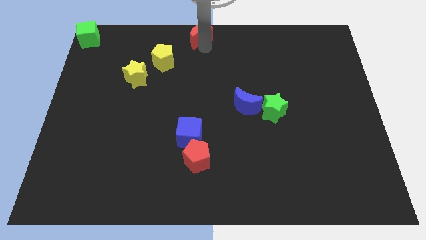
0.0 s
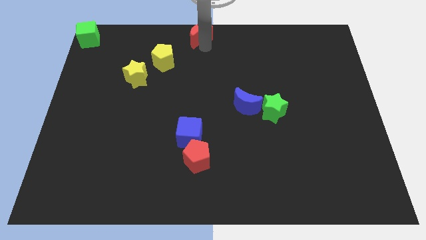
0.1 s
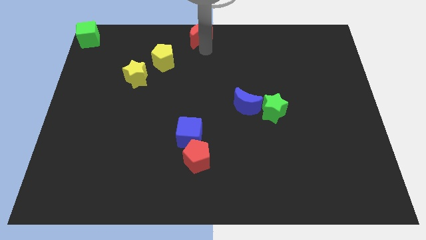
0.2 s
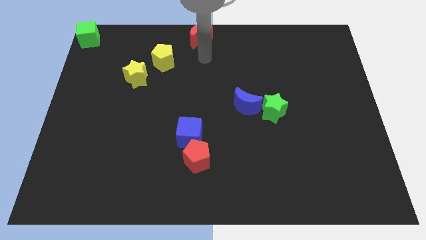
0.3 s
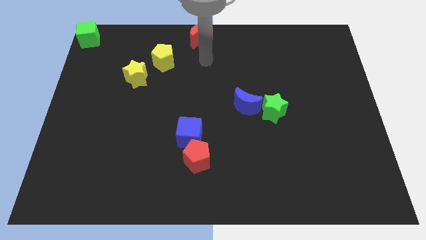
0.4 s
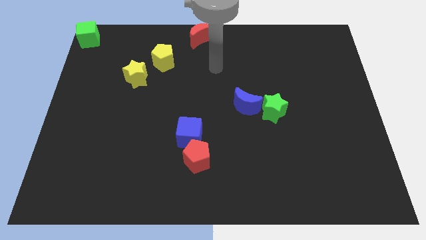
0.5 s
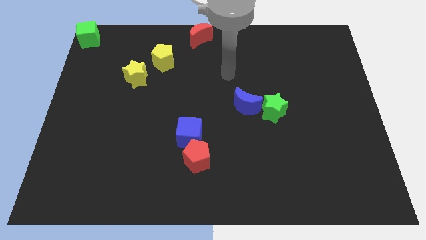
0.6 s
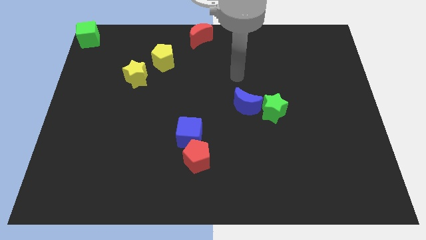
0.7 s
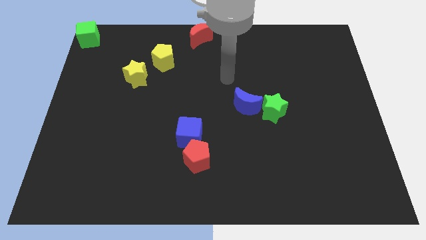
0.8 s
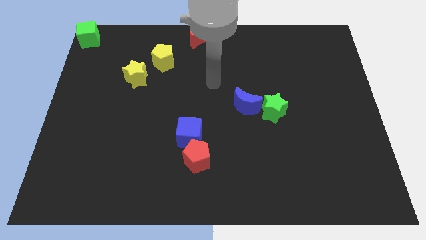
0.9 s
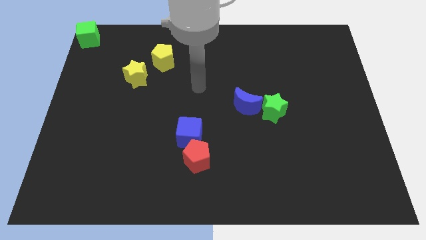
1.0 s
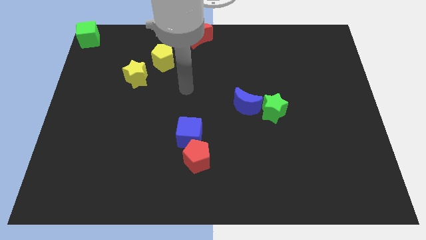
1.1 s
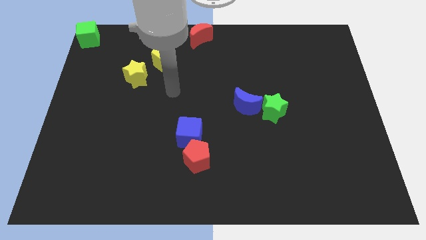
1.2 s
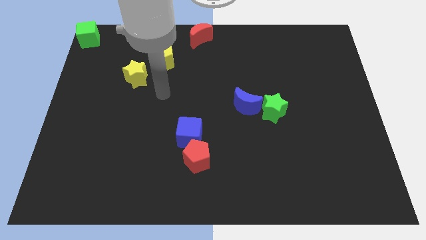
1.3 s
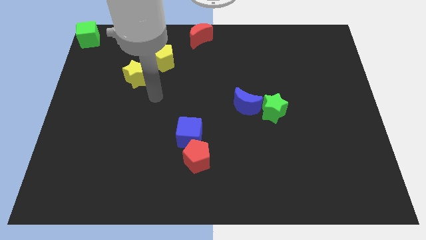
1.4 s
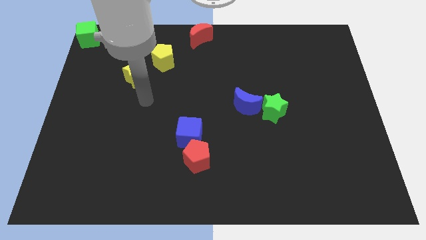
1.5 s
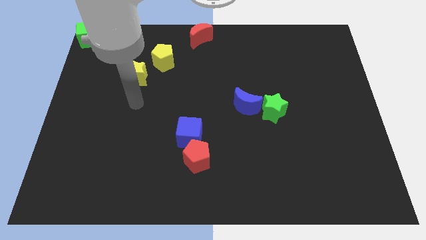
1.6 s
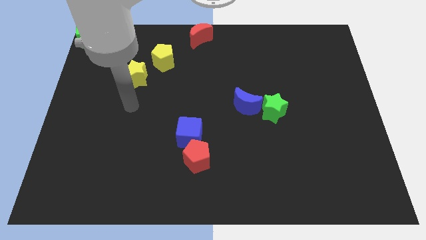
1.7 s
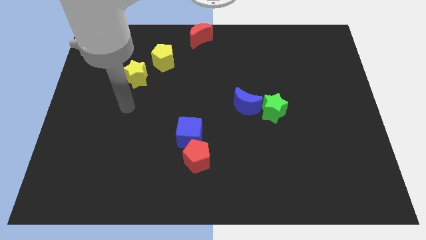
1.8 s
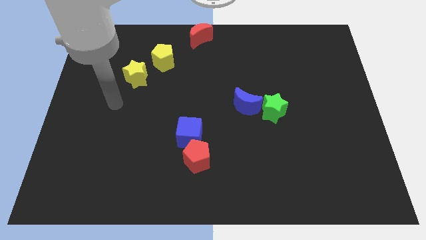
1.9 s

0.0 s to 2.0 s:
move the red moon slightly up

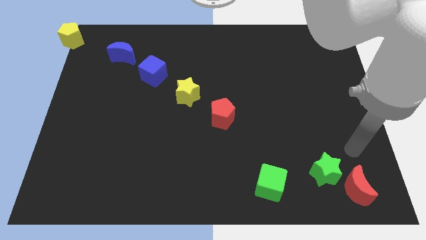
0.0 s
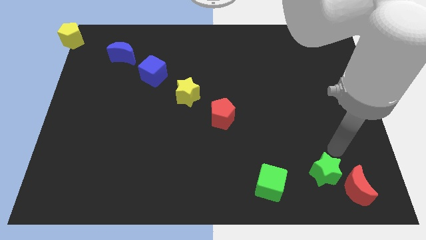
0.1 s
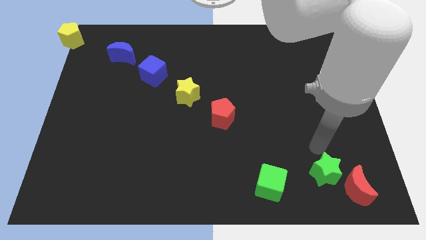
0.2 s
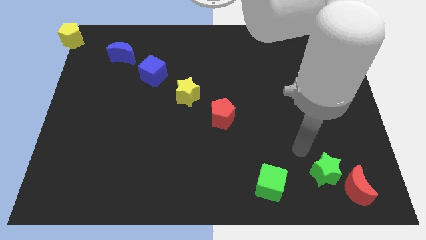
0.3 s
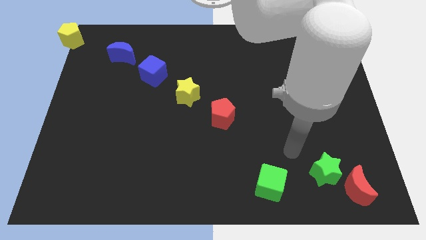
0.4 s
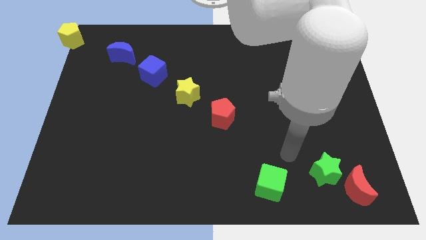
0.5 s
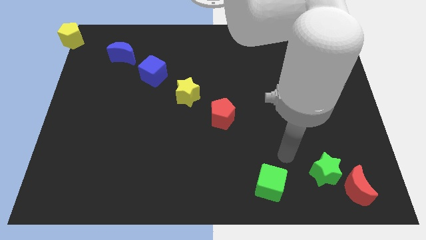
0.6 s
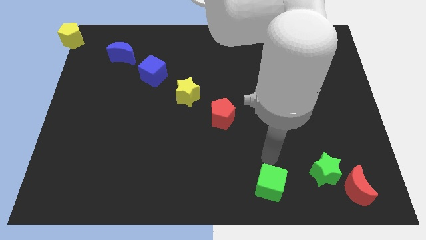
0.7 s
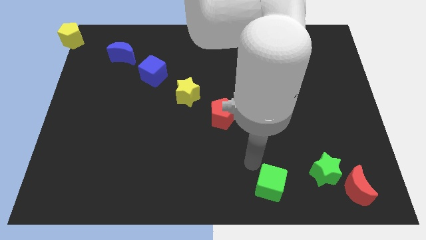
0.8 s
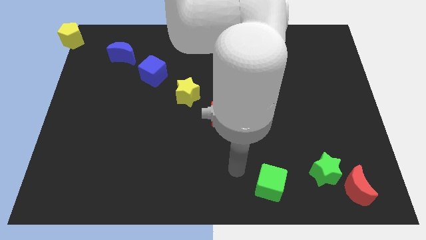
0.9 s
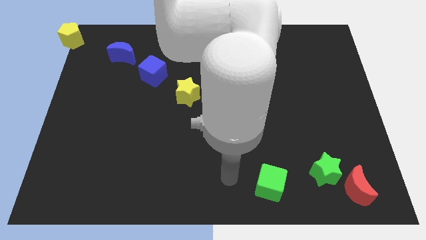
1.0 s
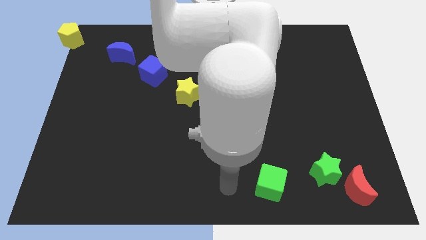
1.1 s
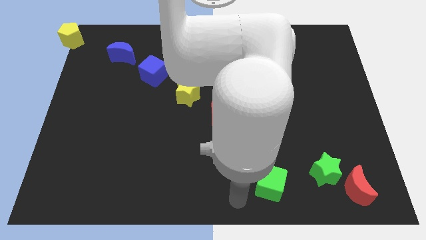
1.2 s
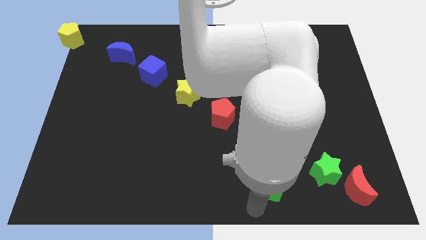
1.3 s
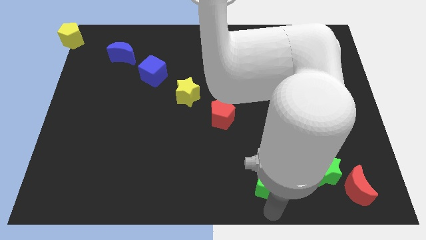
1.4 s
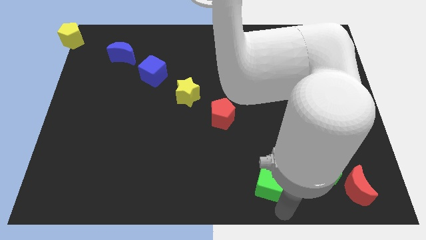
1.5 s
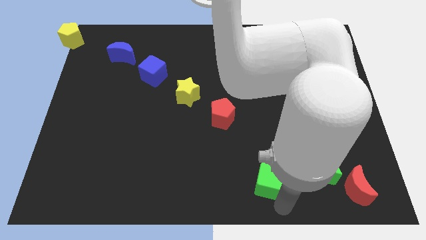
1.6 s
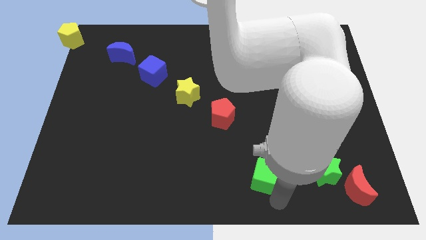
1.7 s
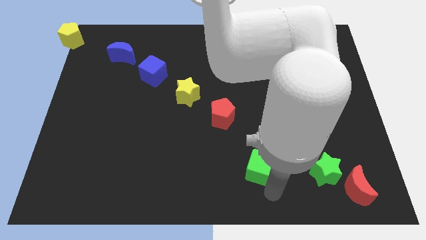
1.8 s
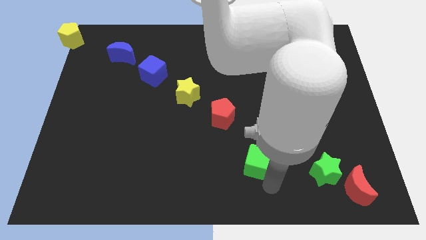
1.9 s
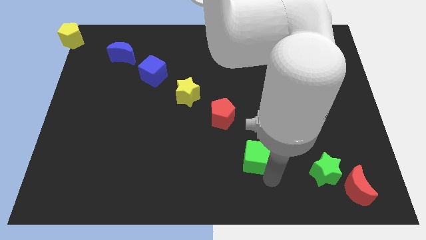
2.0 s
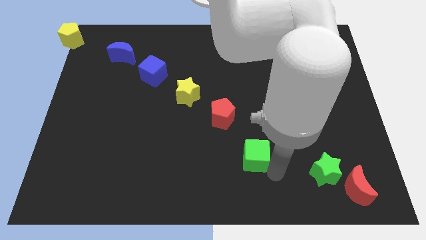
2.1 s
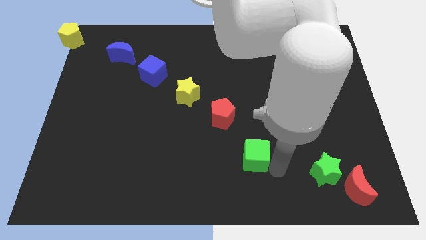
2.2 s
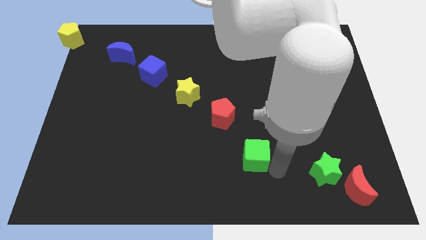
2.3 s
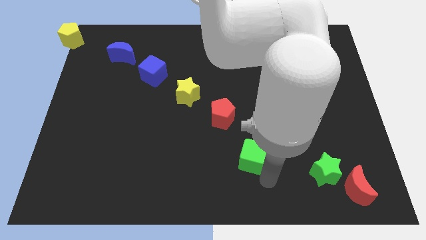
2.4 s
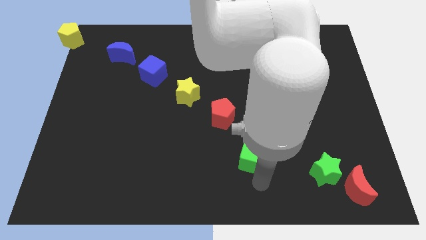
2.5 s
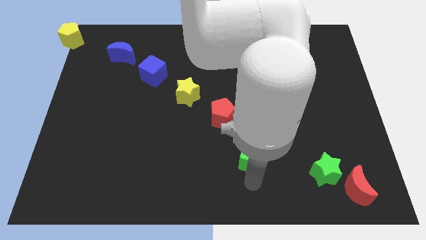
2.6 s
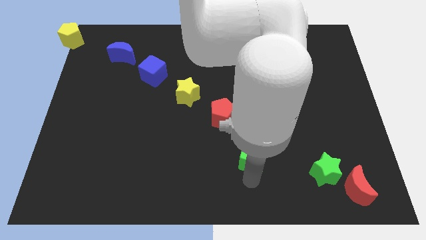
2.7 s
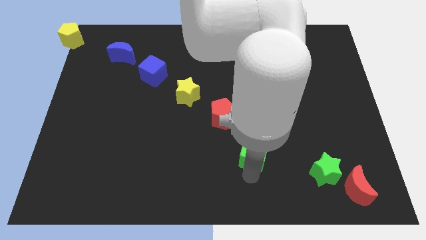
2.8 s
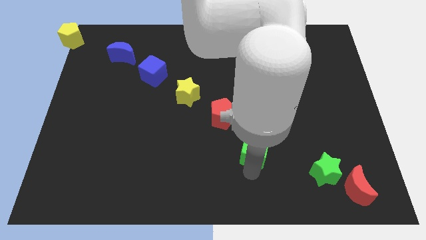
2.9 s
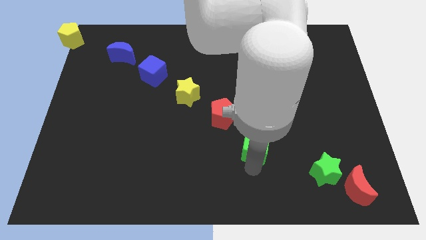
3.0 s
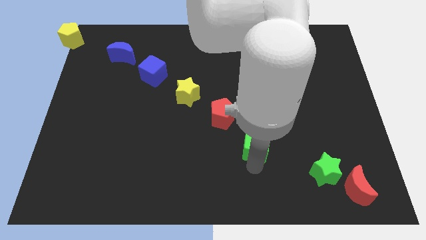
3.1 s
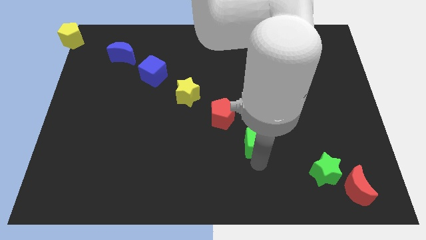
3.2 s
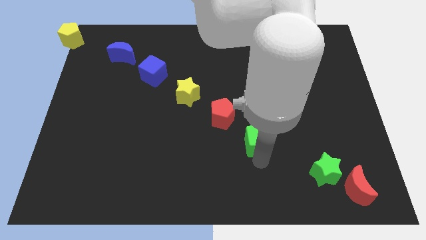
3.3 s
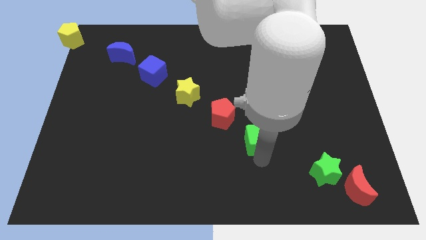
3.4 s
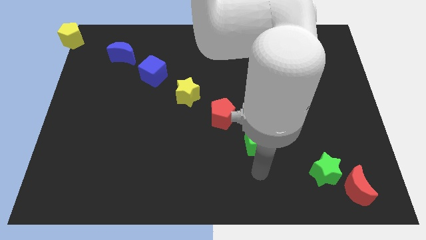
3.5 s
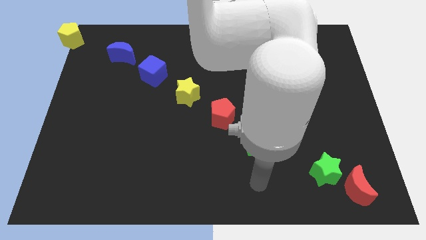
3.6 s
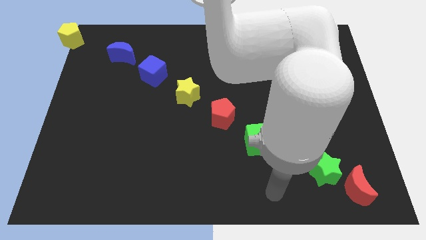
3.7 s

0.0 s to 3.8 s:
add the green cube to the diagonal line of the blocks

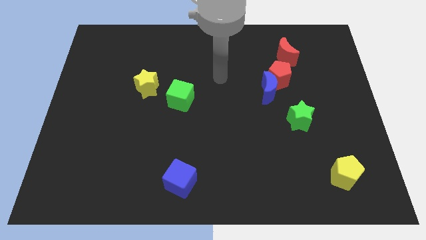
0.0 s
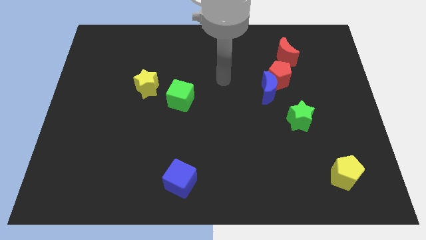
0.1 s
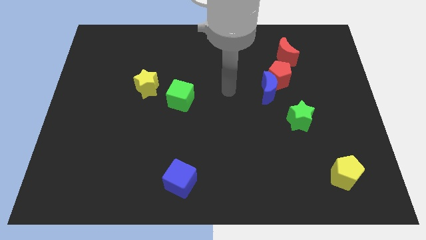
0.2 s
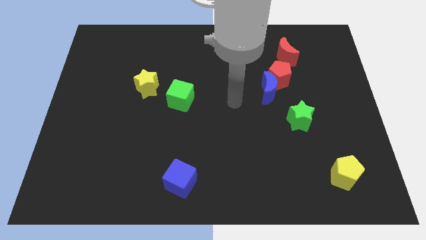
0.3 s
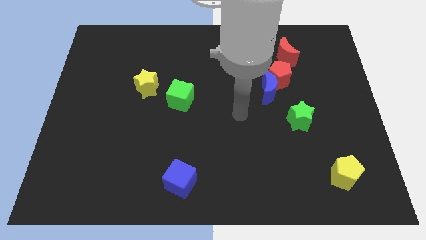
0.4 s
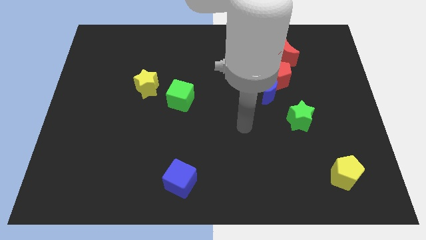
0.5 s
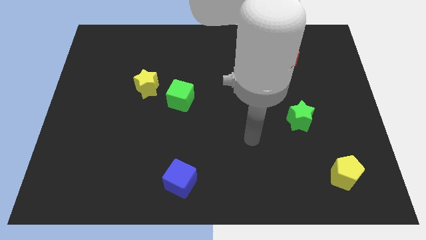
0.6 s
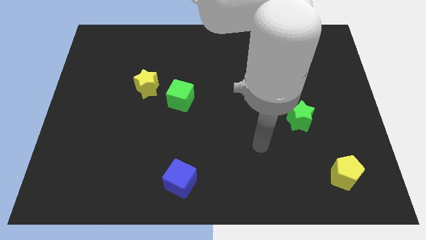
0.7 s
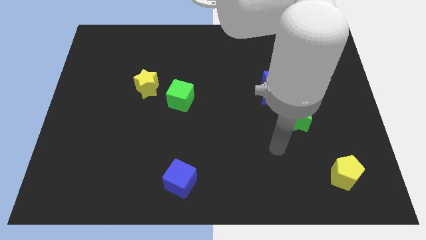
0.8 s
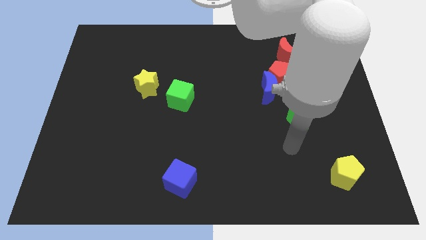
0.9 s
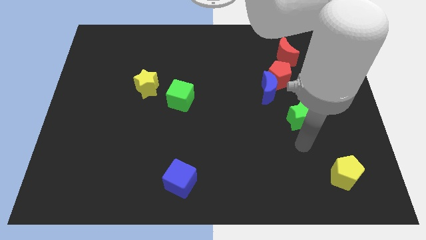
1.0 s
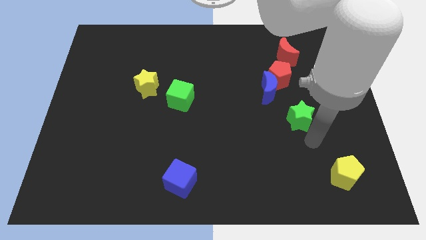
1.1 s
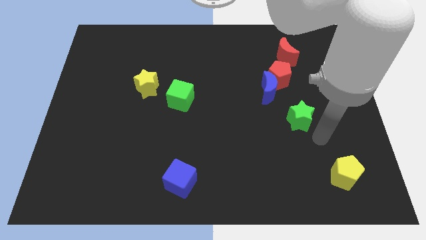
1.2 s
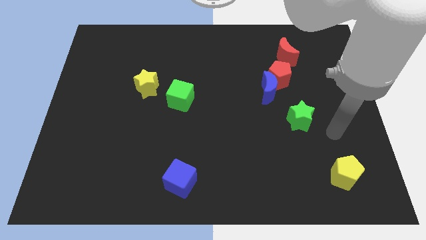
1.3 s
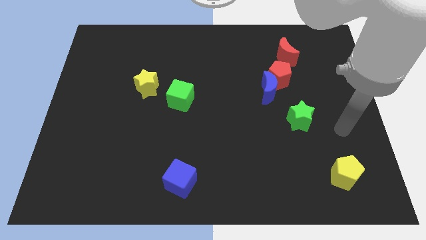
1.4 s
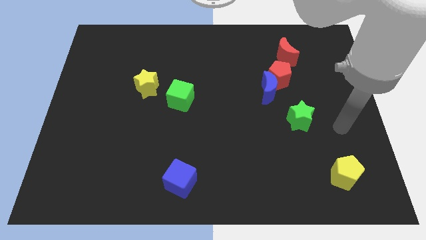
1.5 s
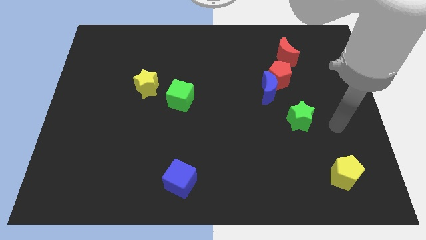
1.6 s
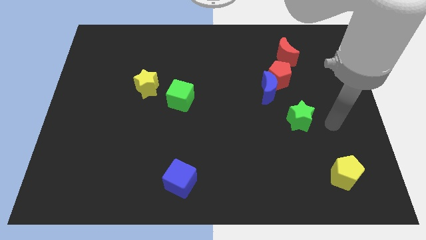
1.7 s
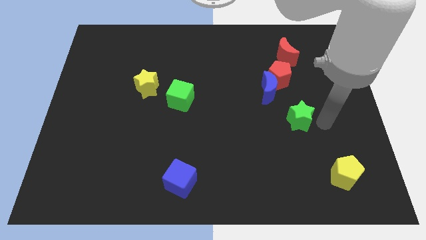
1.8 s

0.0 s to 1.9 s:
place your hand parallel right to the green star

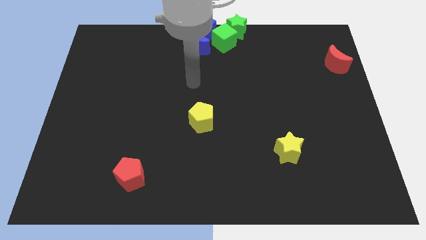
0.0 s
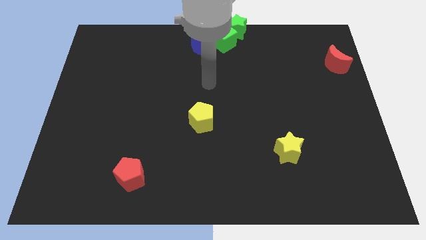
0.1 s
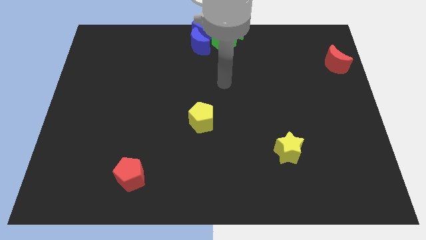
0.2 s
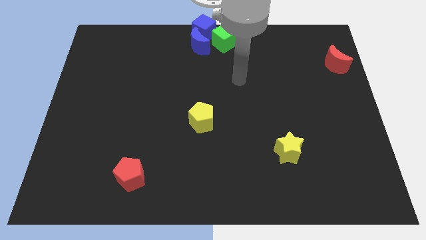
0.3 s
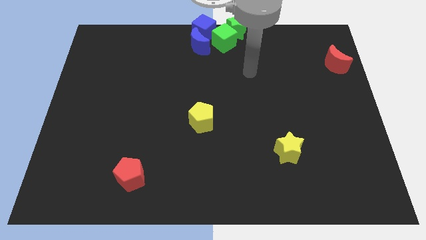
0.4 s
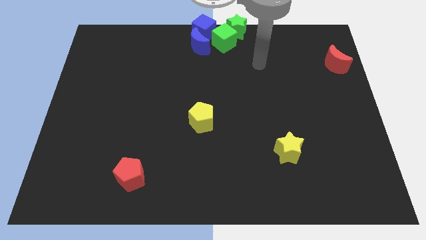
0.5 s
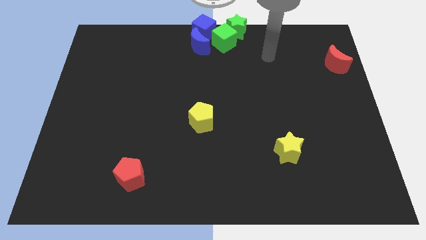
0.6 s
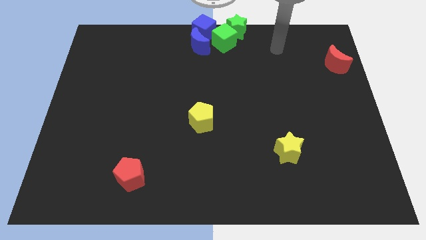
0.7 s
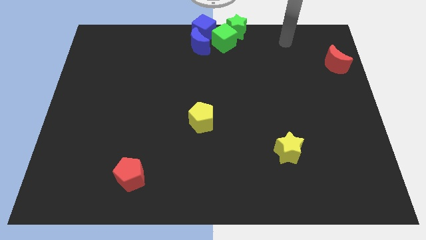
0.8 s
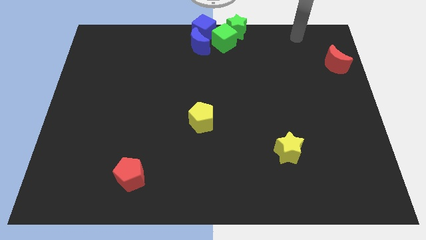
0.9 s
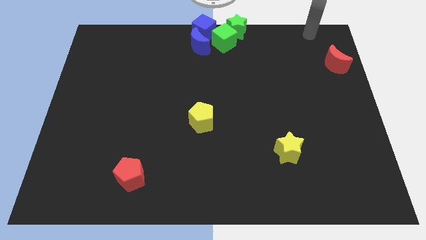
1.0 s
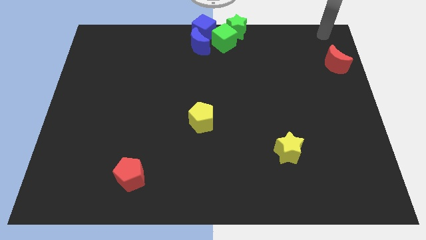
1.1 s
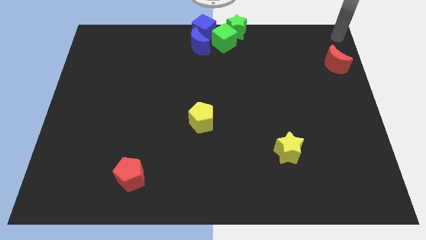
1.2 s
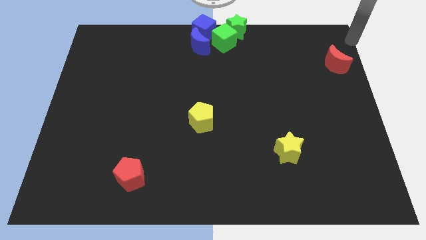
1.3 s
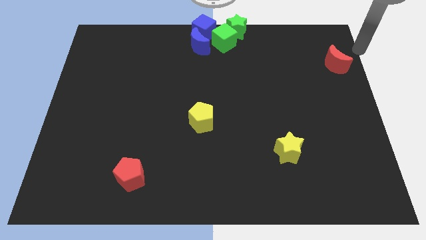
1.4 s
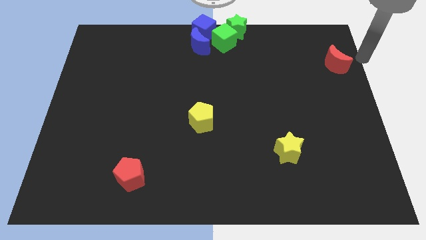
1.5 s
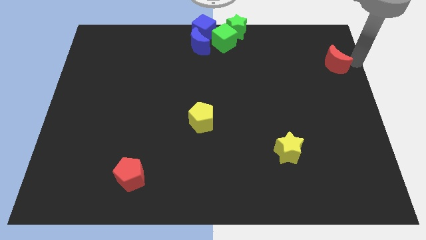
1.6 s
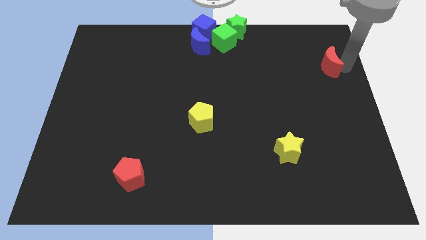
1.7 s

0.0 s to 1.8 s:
move your arm right to the red crescent
